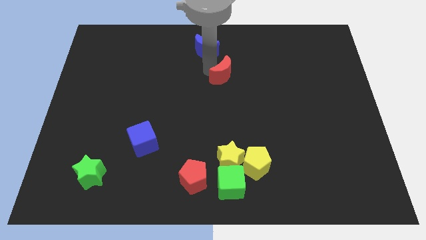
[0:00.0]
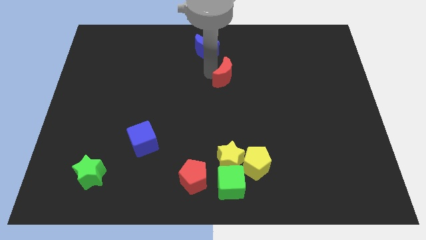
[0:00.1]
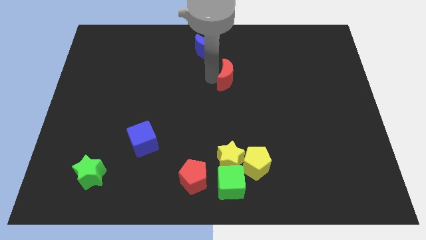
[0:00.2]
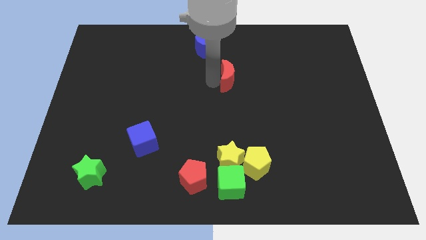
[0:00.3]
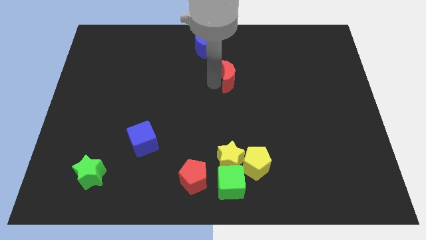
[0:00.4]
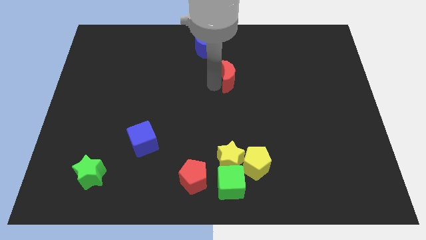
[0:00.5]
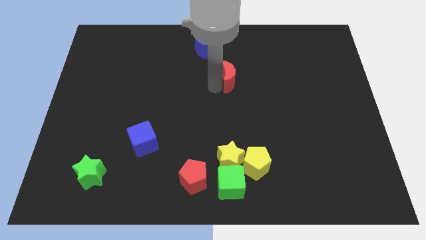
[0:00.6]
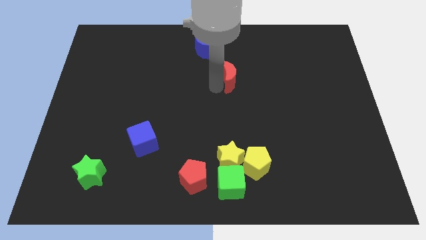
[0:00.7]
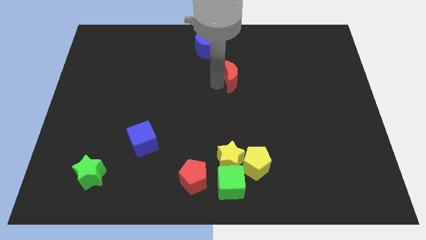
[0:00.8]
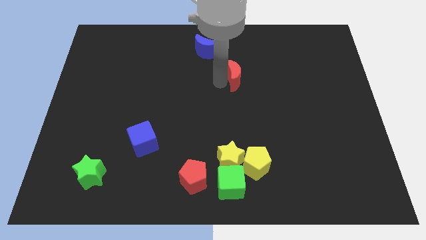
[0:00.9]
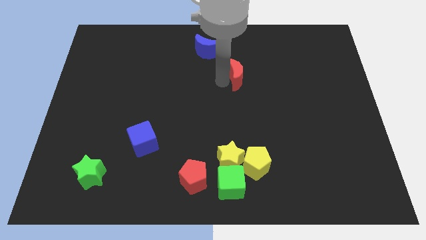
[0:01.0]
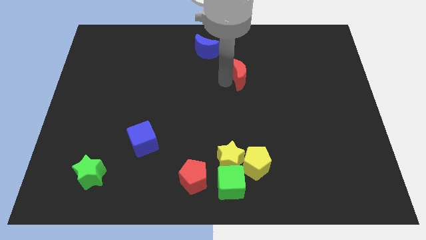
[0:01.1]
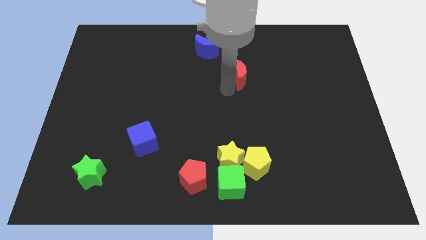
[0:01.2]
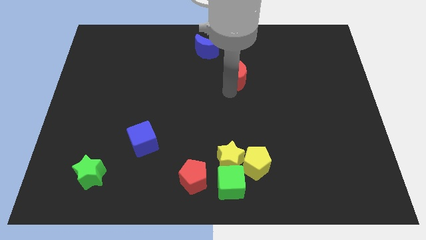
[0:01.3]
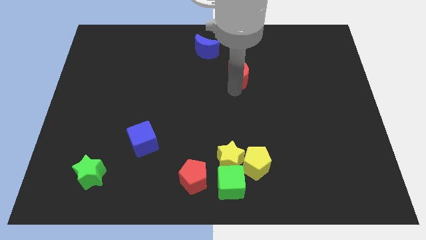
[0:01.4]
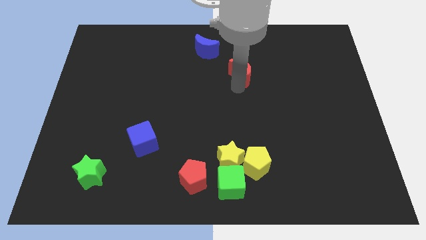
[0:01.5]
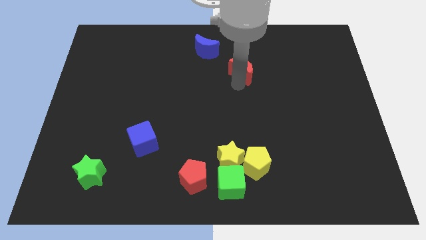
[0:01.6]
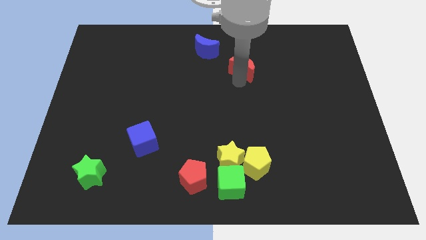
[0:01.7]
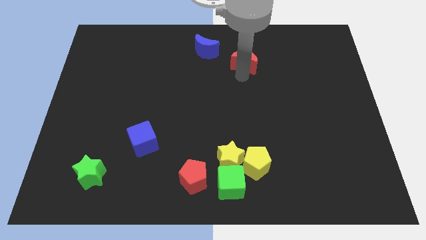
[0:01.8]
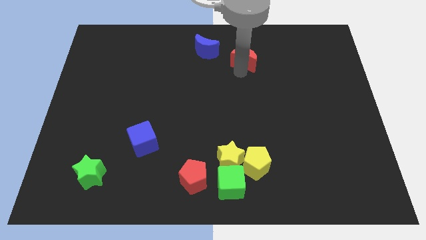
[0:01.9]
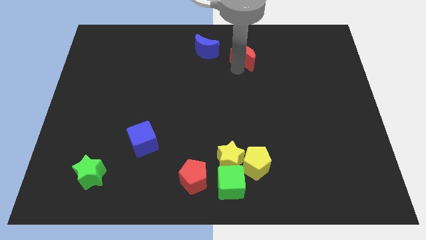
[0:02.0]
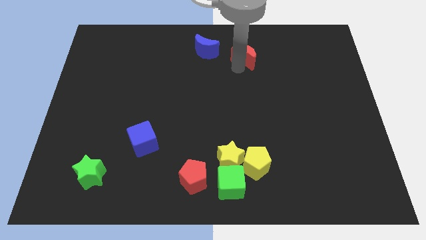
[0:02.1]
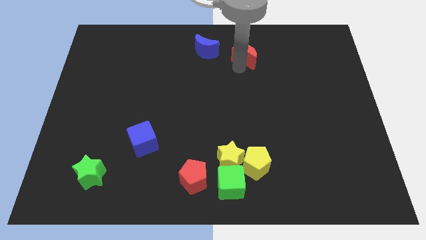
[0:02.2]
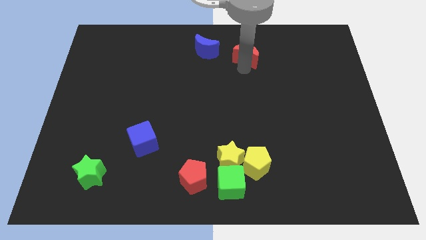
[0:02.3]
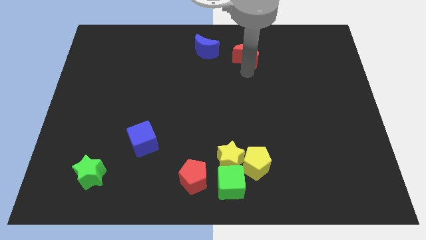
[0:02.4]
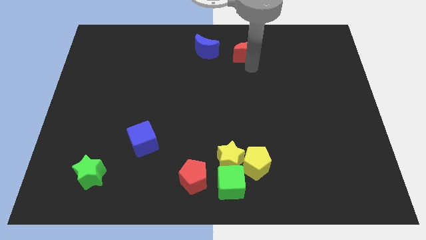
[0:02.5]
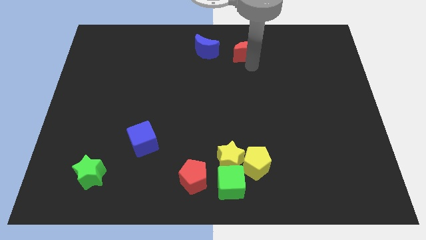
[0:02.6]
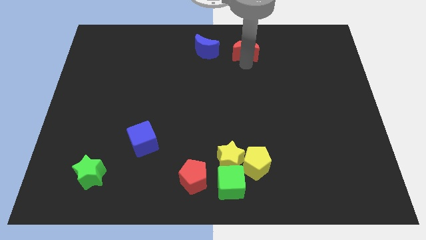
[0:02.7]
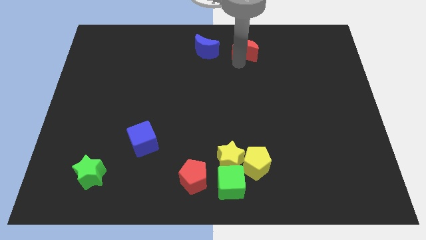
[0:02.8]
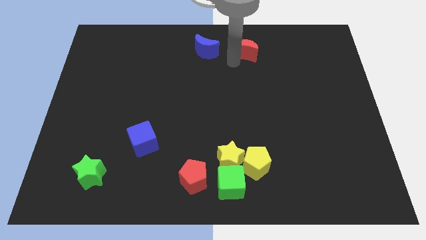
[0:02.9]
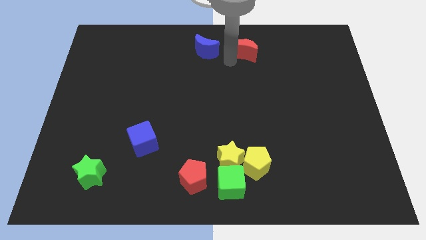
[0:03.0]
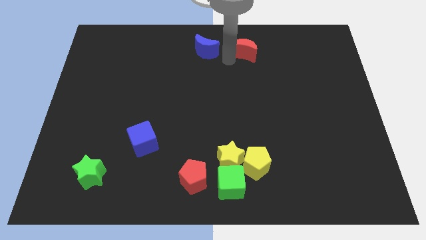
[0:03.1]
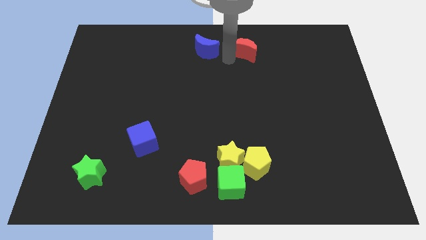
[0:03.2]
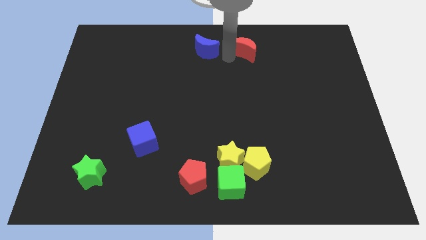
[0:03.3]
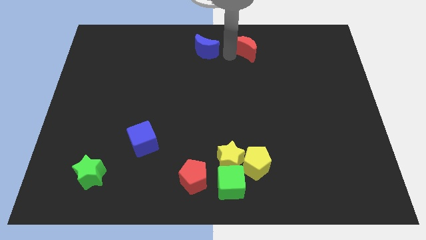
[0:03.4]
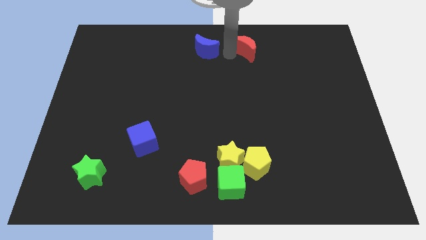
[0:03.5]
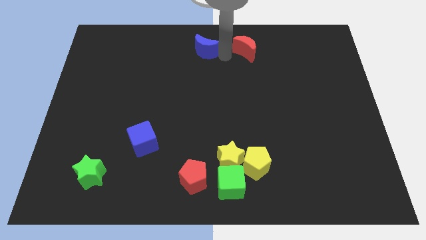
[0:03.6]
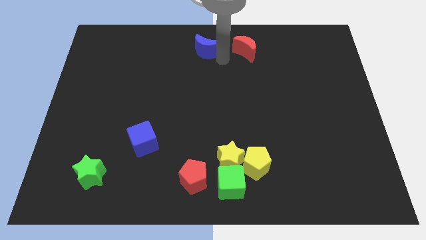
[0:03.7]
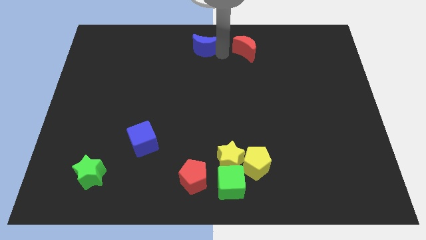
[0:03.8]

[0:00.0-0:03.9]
place the red moon right to the blue moon

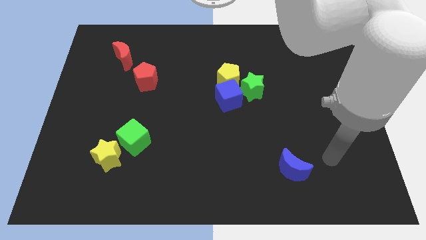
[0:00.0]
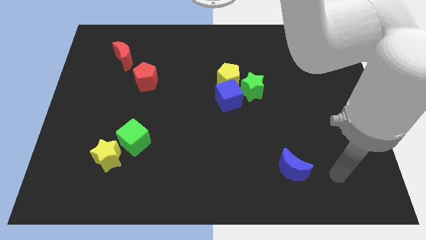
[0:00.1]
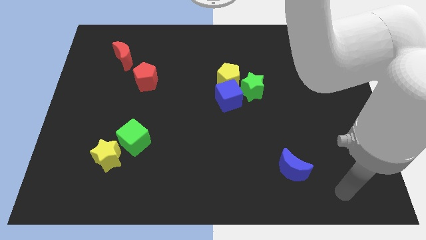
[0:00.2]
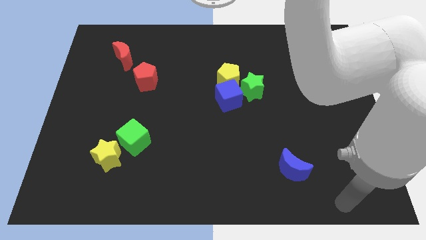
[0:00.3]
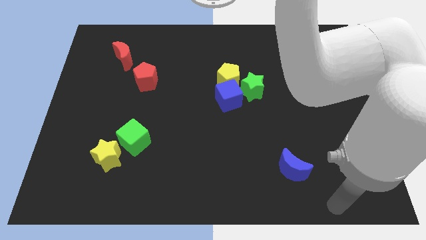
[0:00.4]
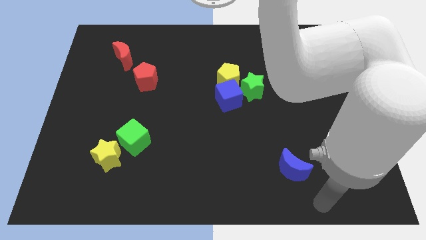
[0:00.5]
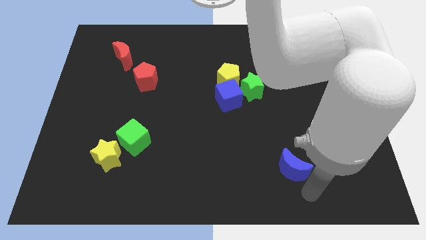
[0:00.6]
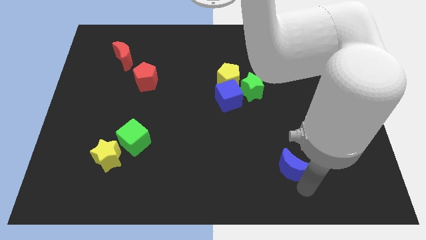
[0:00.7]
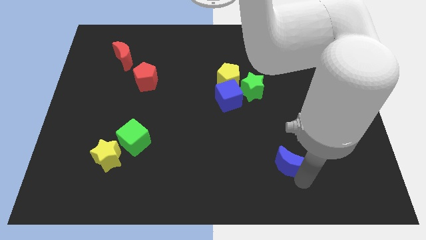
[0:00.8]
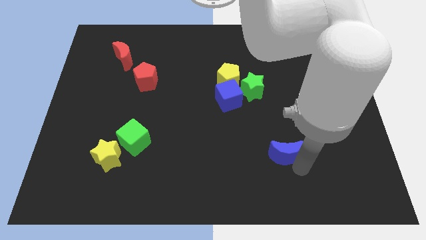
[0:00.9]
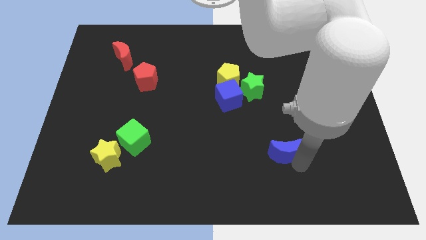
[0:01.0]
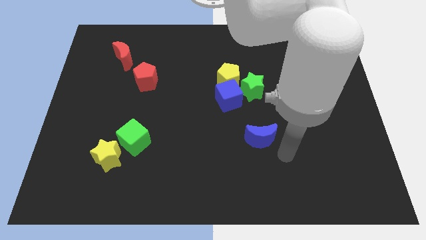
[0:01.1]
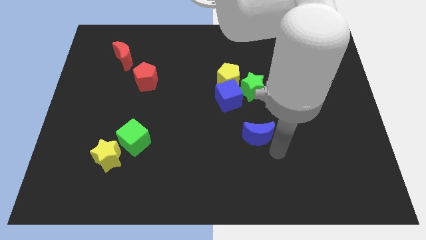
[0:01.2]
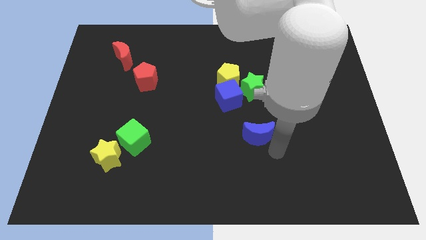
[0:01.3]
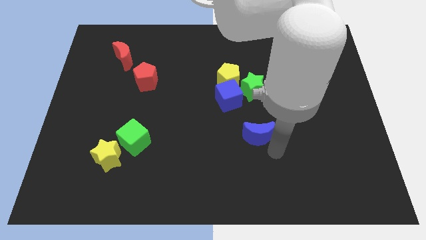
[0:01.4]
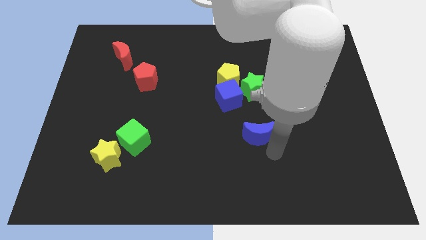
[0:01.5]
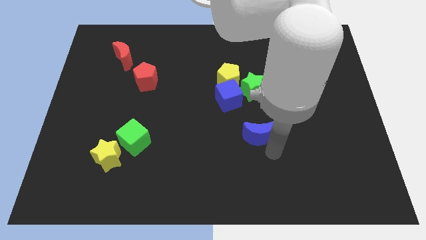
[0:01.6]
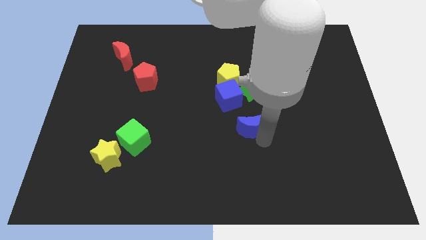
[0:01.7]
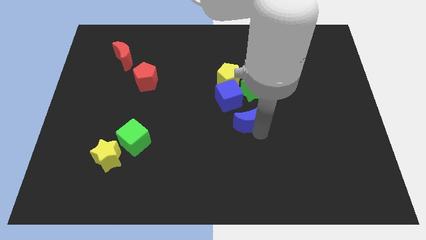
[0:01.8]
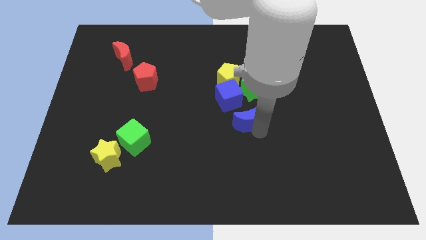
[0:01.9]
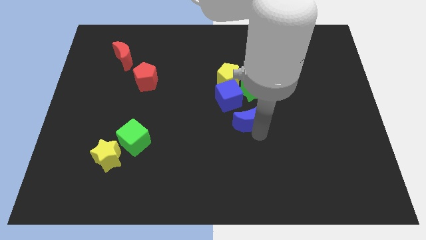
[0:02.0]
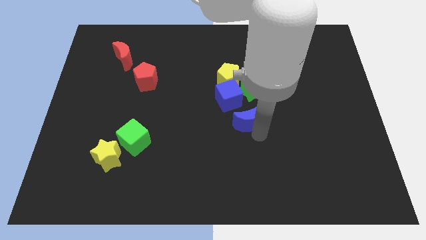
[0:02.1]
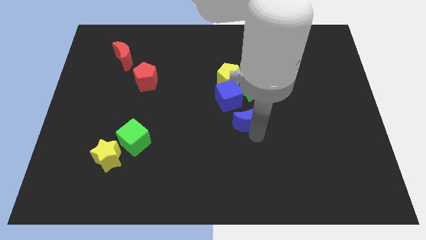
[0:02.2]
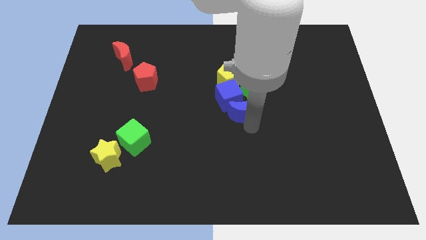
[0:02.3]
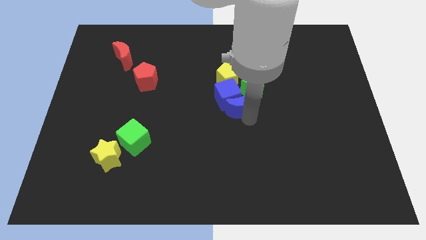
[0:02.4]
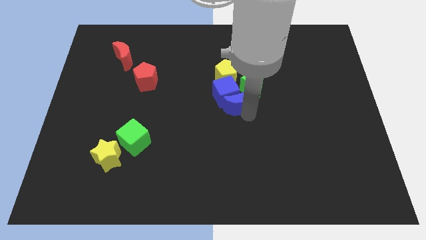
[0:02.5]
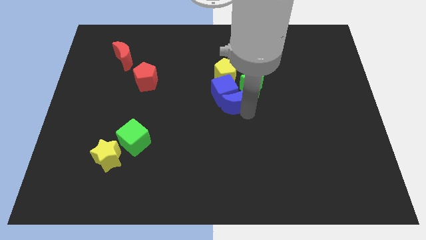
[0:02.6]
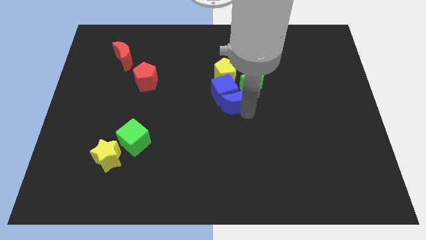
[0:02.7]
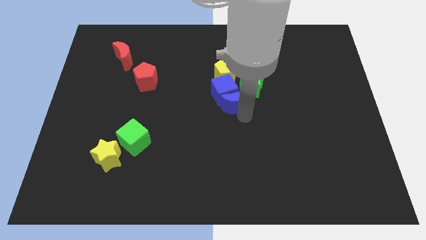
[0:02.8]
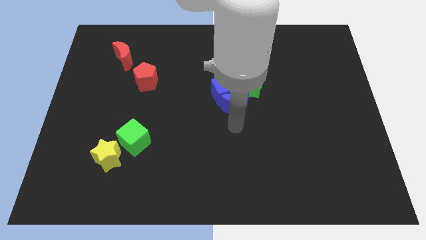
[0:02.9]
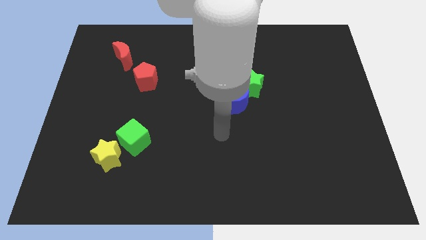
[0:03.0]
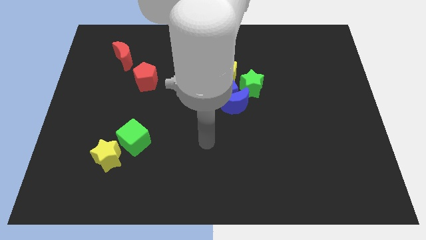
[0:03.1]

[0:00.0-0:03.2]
push the blue moon into the blue cube

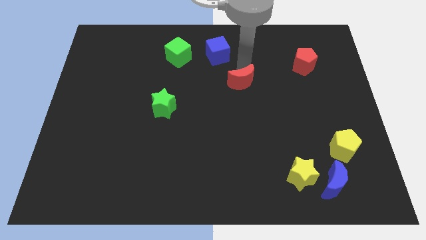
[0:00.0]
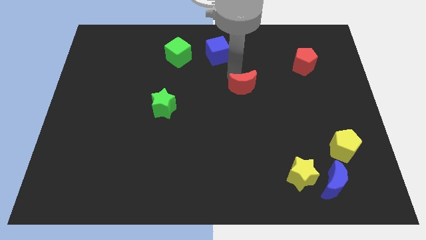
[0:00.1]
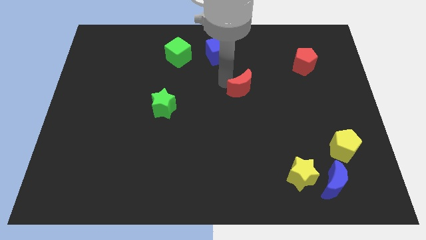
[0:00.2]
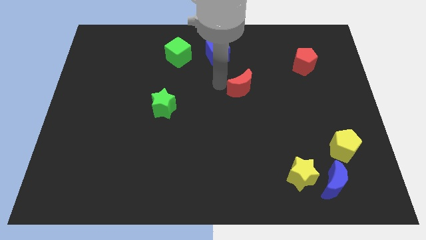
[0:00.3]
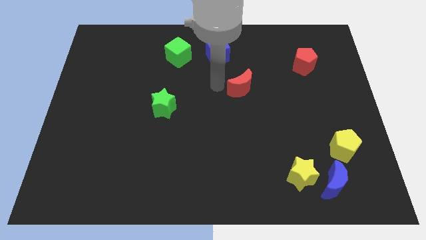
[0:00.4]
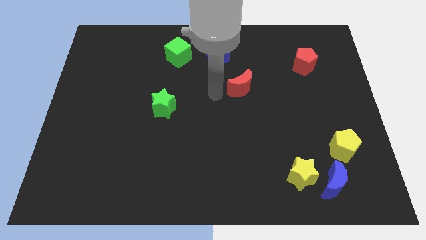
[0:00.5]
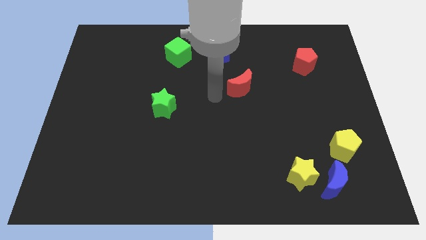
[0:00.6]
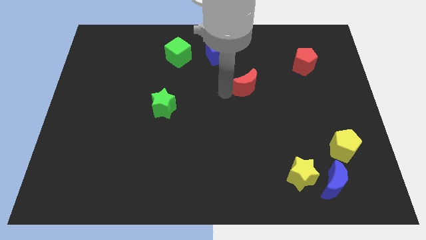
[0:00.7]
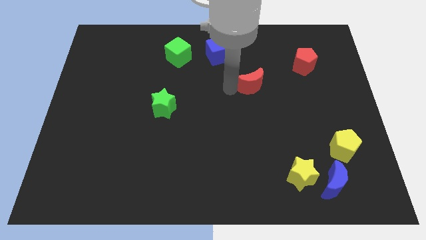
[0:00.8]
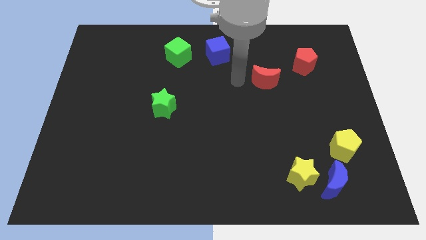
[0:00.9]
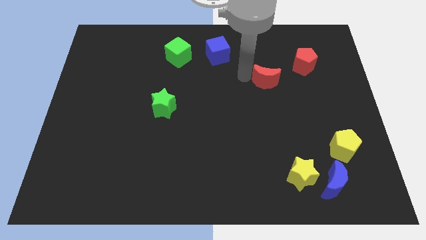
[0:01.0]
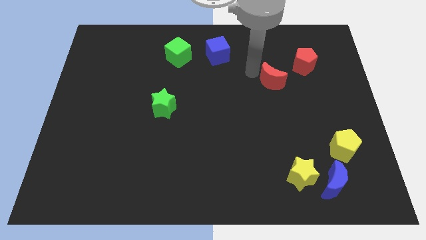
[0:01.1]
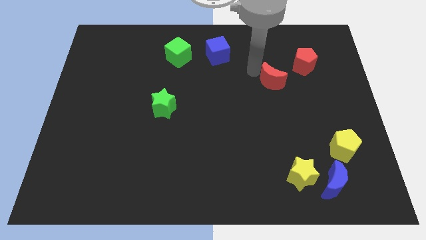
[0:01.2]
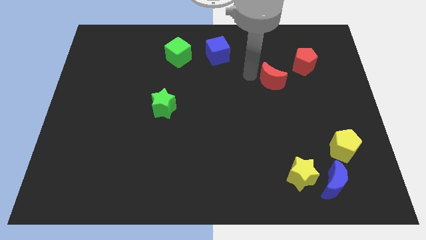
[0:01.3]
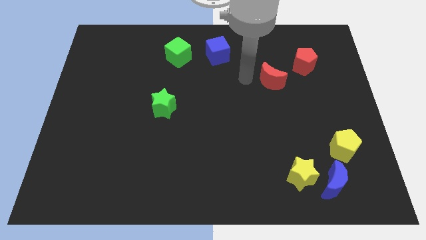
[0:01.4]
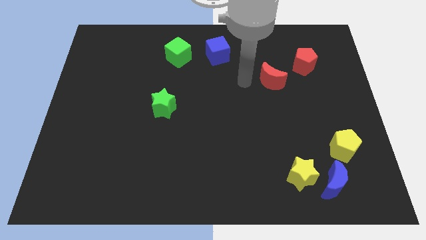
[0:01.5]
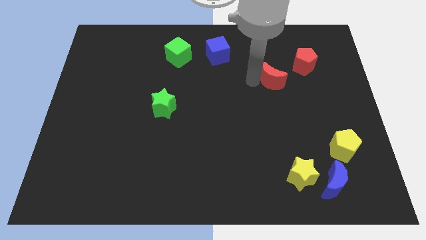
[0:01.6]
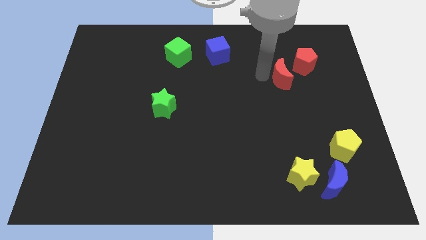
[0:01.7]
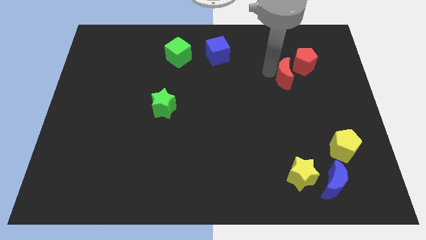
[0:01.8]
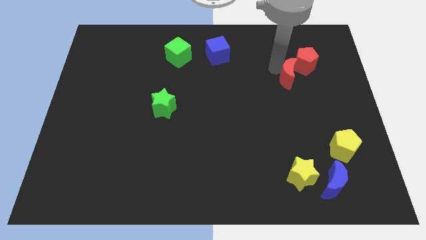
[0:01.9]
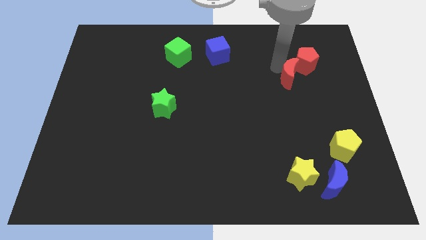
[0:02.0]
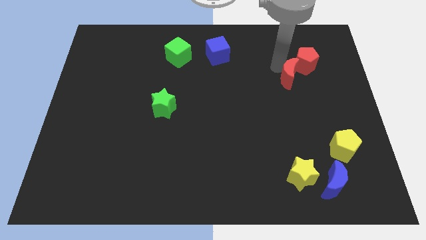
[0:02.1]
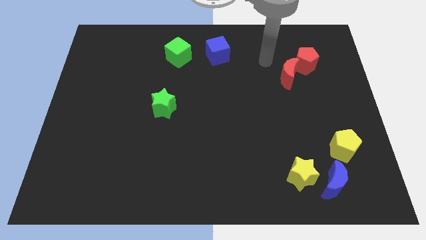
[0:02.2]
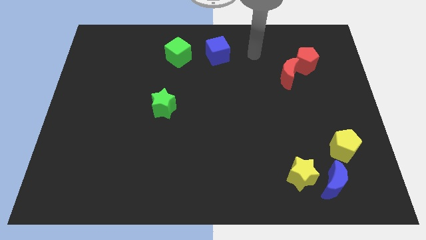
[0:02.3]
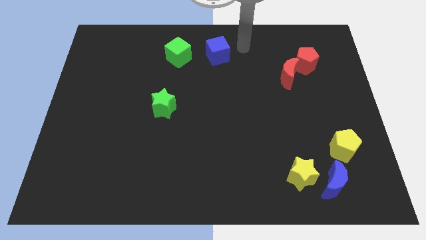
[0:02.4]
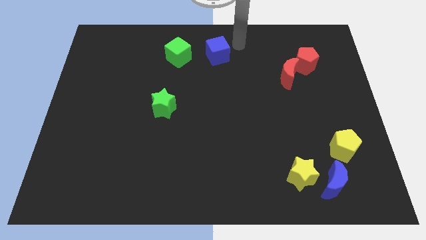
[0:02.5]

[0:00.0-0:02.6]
move the red crescent at bottom right to red pentagon
